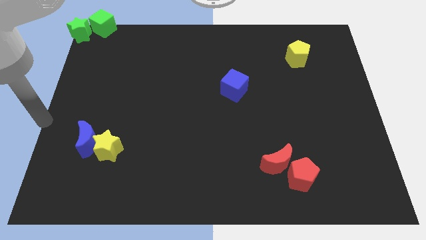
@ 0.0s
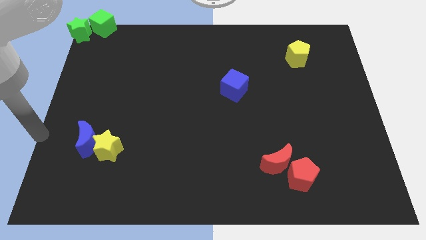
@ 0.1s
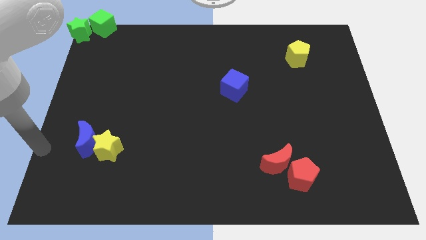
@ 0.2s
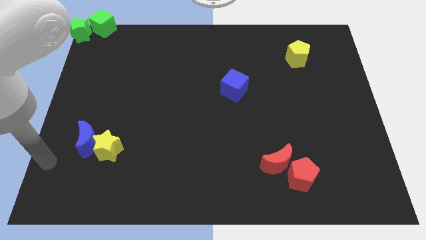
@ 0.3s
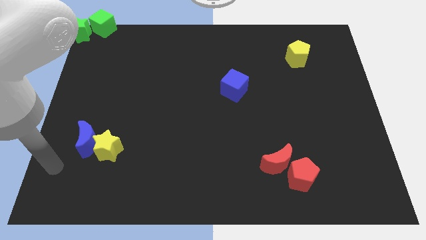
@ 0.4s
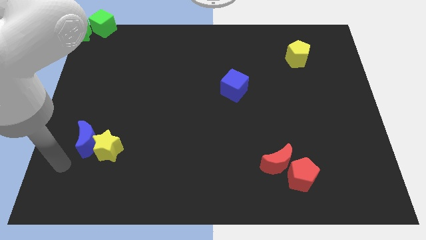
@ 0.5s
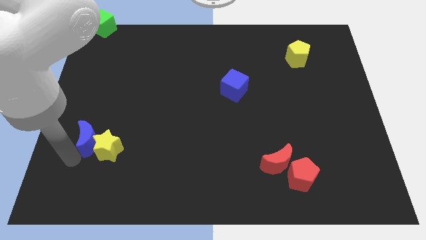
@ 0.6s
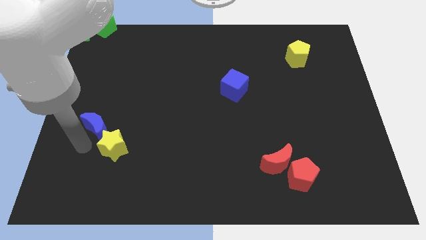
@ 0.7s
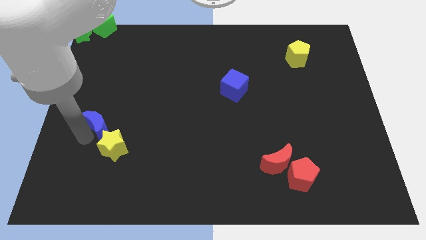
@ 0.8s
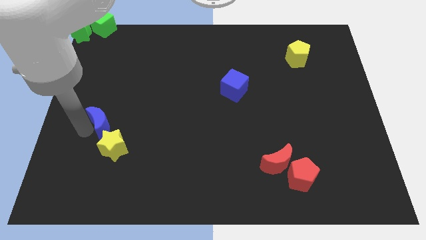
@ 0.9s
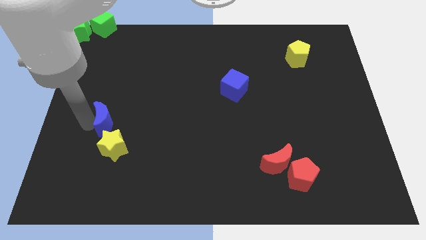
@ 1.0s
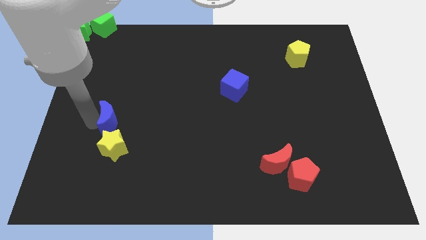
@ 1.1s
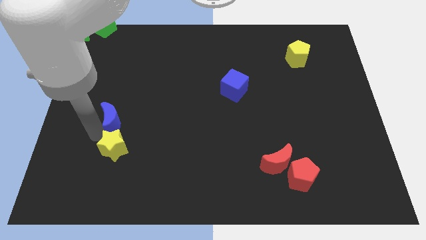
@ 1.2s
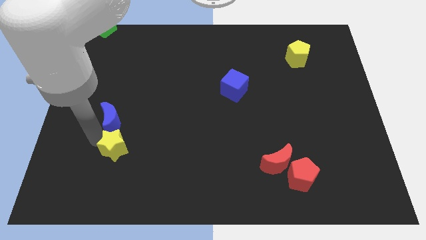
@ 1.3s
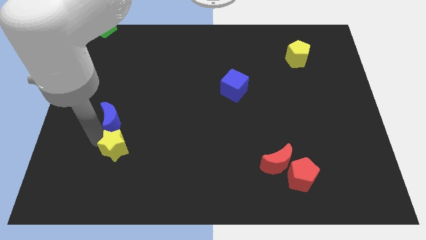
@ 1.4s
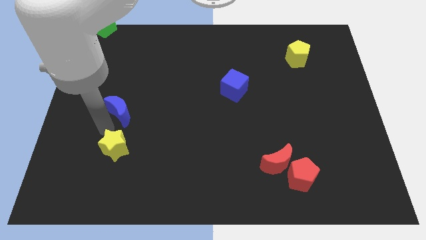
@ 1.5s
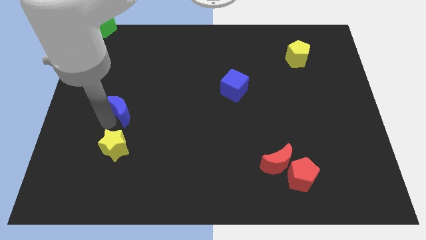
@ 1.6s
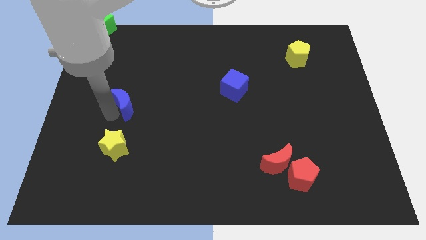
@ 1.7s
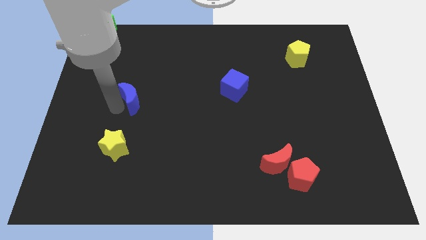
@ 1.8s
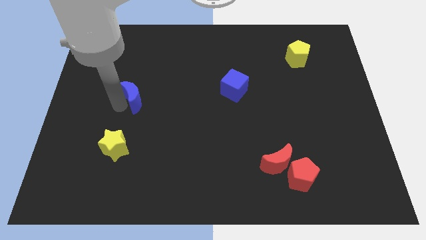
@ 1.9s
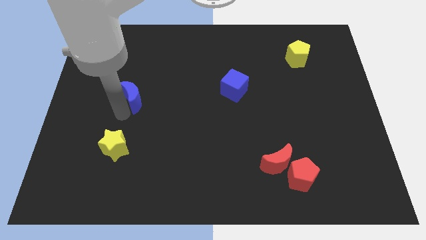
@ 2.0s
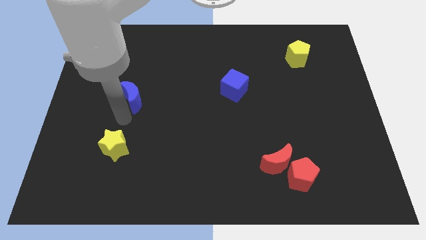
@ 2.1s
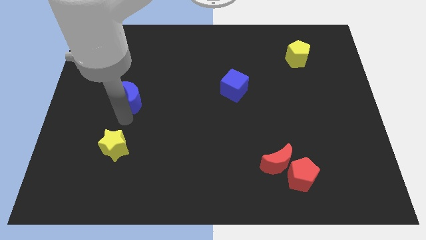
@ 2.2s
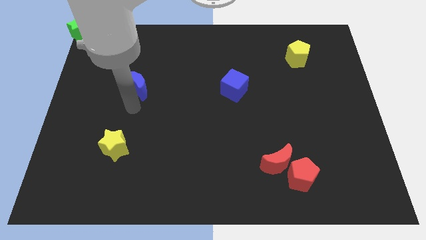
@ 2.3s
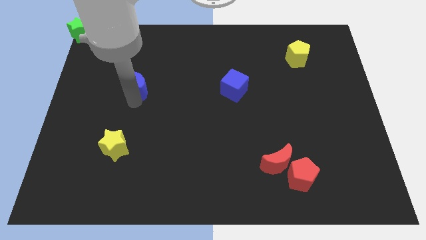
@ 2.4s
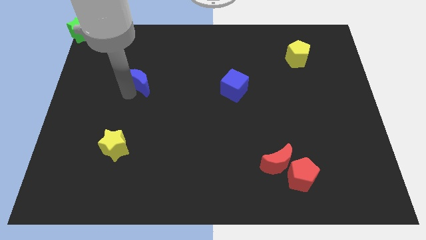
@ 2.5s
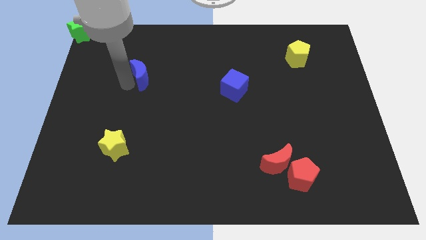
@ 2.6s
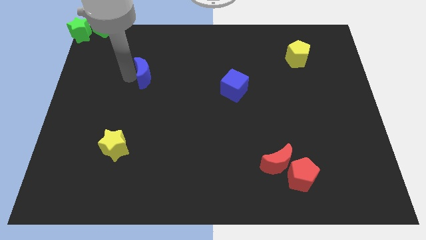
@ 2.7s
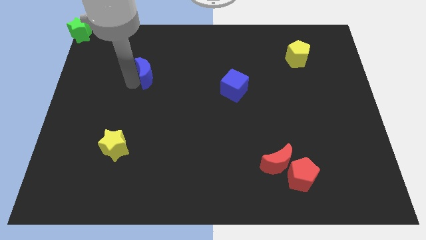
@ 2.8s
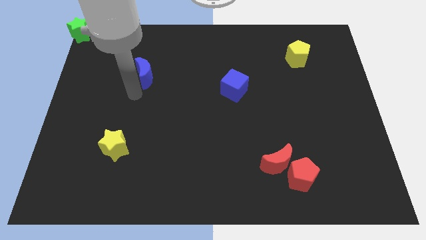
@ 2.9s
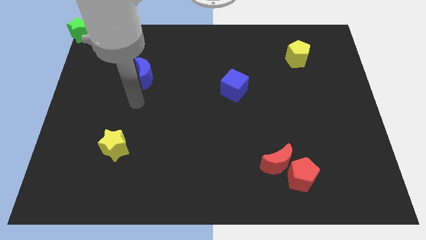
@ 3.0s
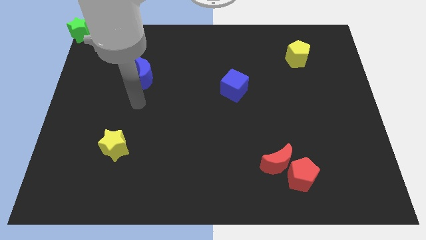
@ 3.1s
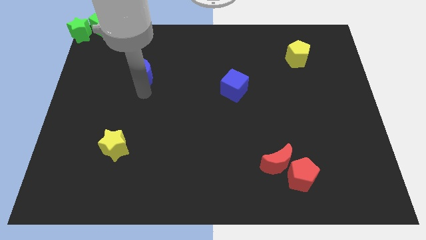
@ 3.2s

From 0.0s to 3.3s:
place the blue moon to the left of the blue cube

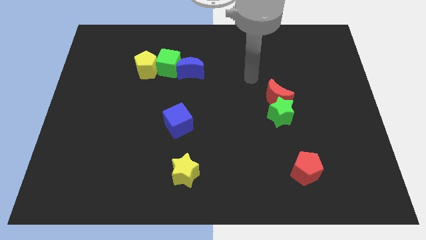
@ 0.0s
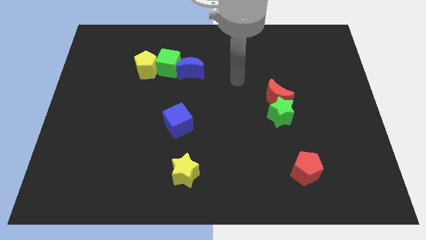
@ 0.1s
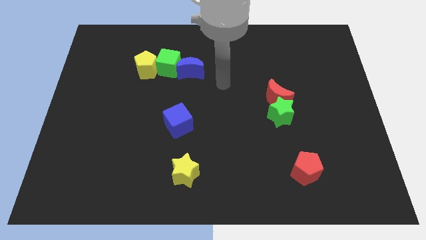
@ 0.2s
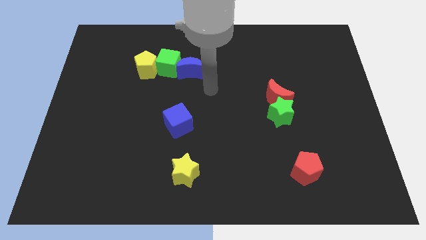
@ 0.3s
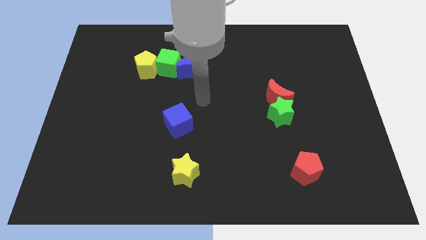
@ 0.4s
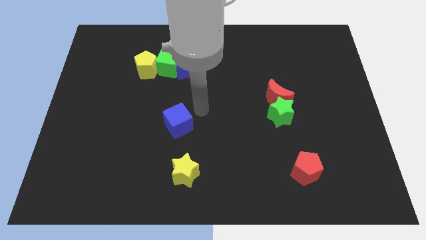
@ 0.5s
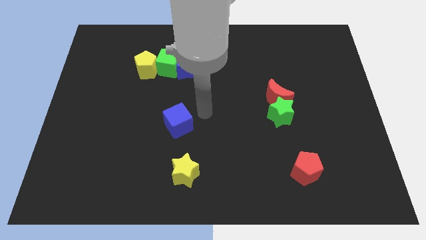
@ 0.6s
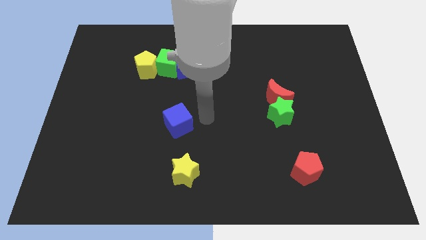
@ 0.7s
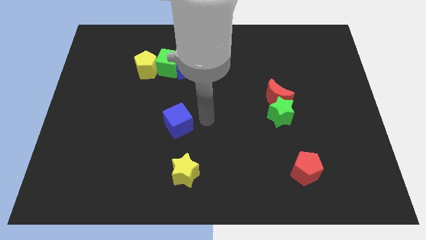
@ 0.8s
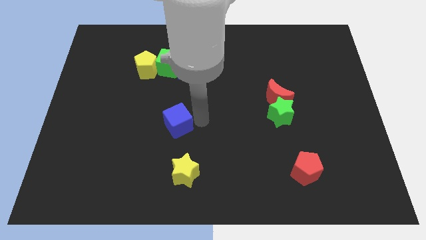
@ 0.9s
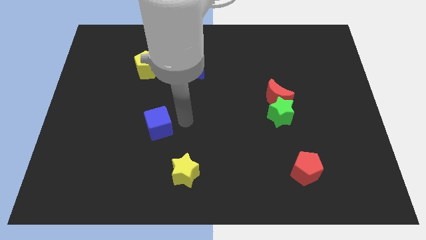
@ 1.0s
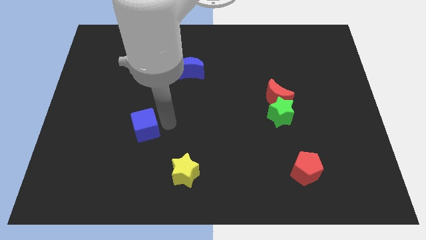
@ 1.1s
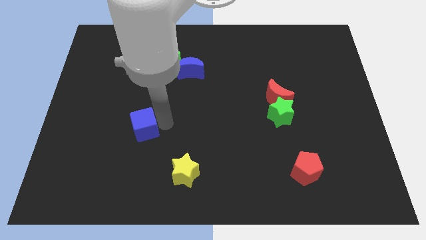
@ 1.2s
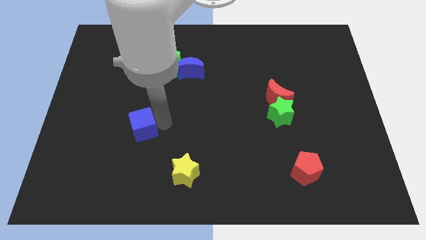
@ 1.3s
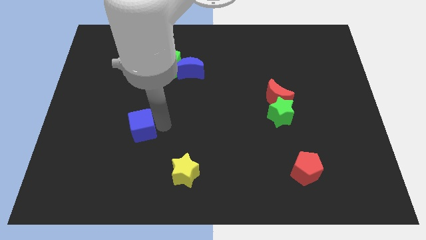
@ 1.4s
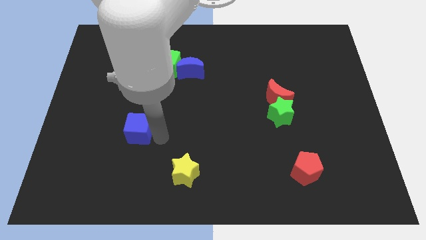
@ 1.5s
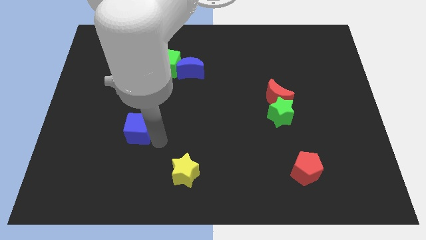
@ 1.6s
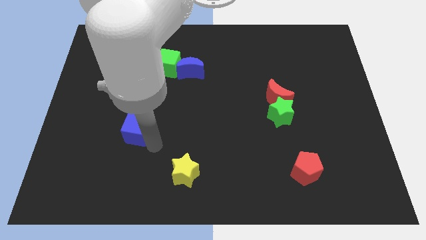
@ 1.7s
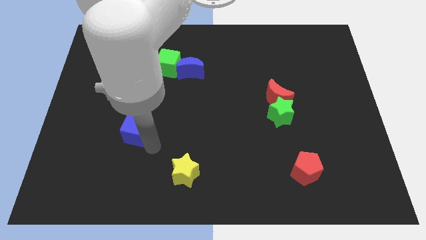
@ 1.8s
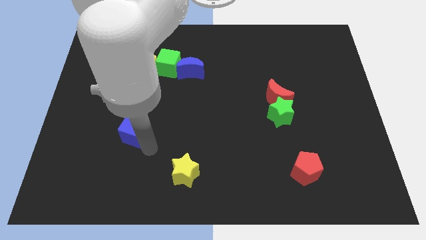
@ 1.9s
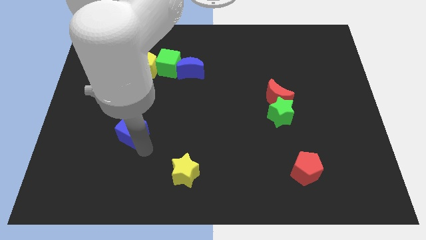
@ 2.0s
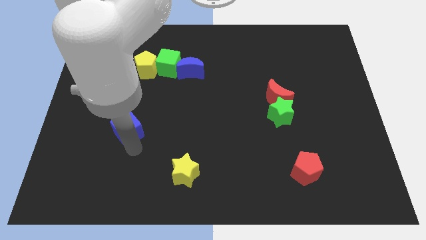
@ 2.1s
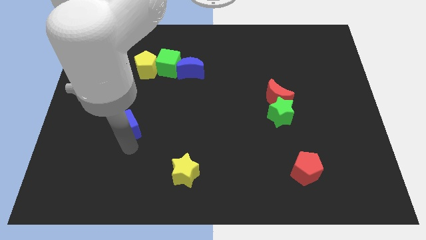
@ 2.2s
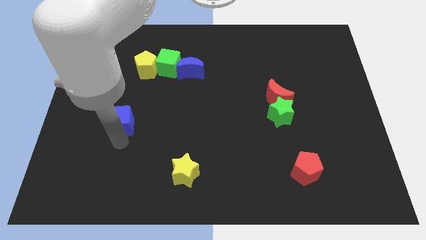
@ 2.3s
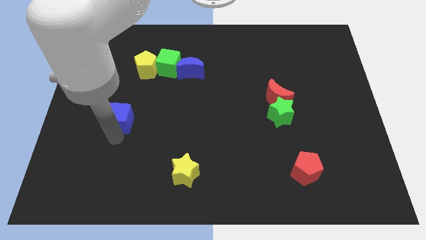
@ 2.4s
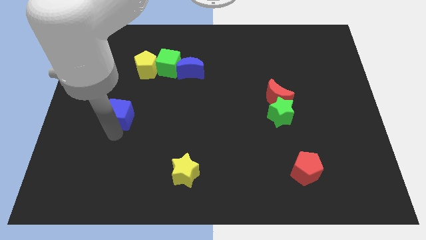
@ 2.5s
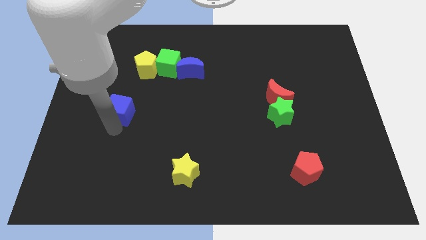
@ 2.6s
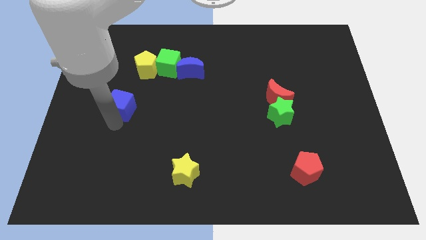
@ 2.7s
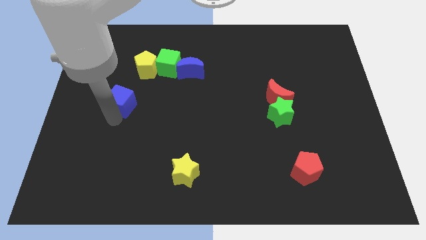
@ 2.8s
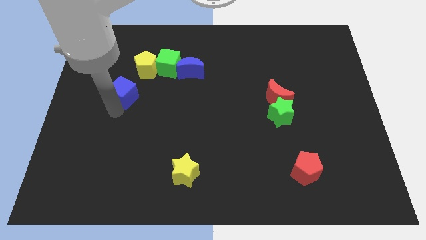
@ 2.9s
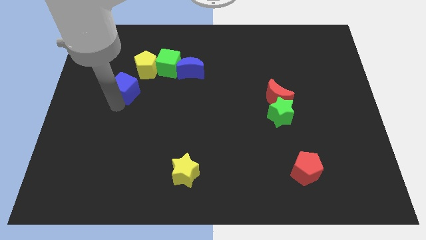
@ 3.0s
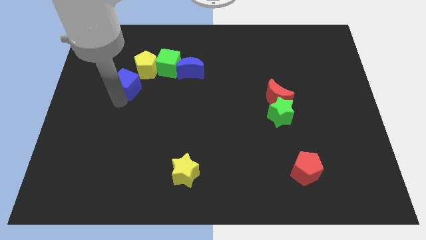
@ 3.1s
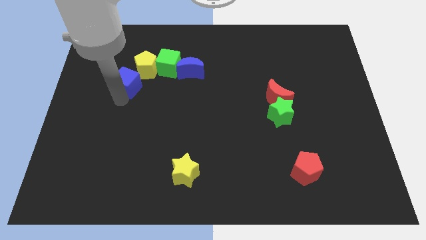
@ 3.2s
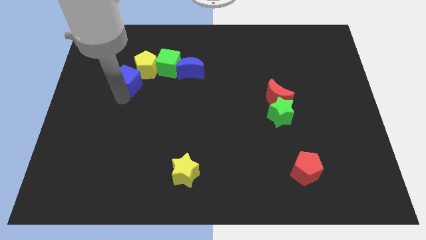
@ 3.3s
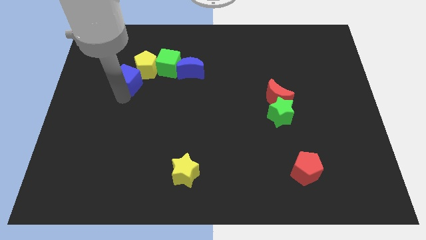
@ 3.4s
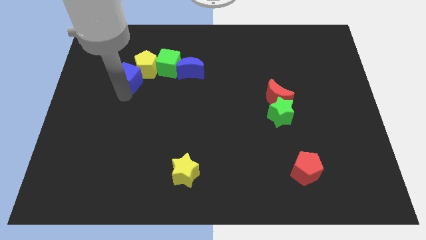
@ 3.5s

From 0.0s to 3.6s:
place the blue cube diagonally bottom left to yellow pentagon

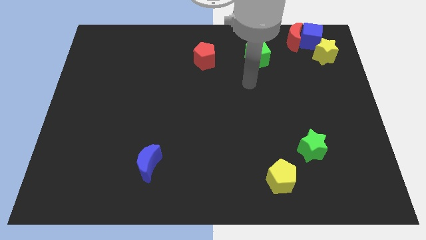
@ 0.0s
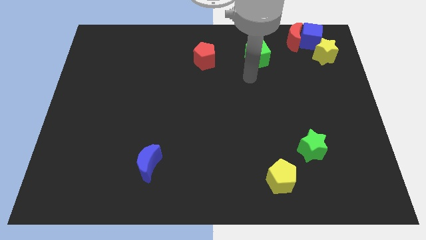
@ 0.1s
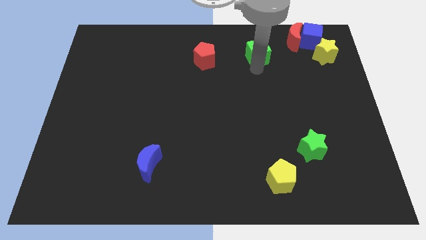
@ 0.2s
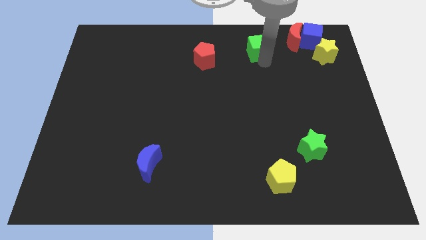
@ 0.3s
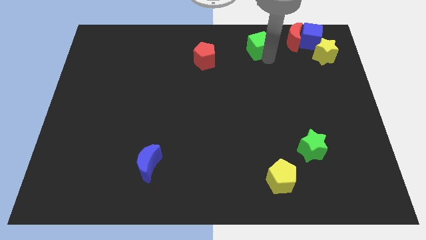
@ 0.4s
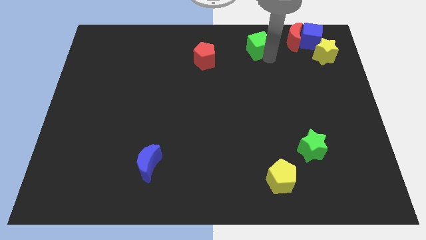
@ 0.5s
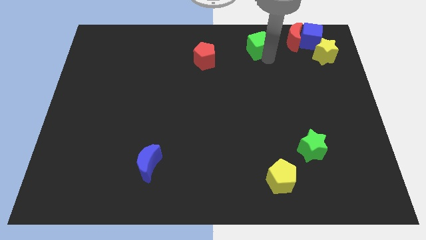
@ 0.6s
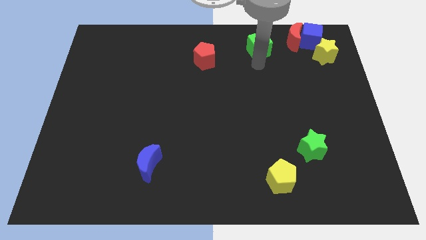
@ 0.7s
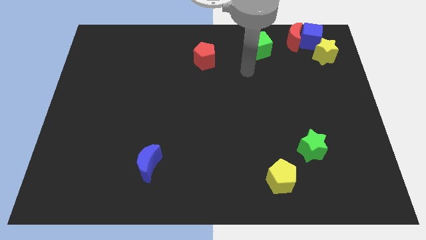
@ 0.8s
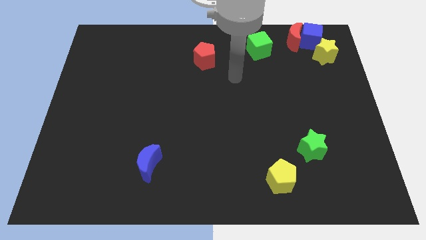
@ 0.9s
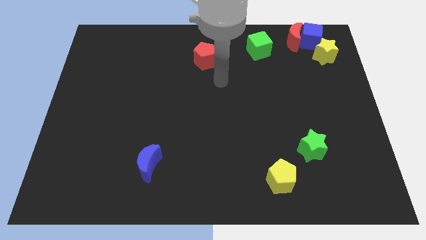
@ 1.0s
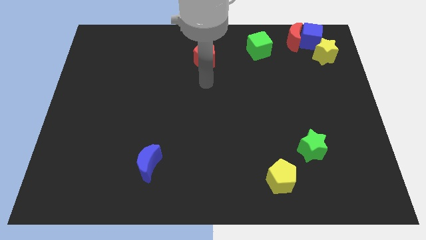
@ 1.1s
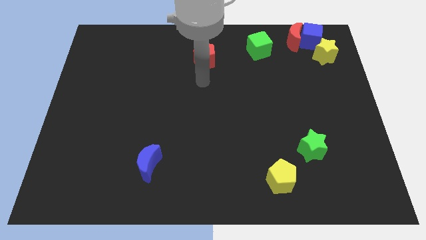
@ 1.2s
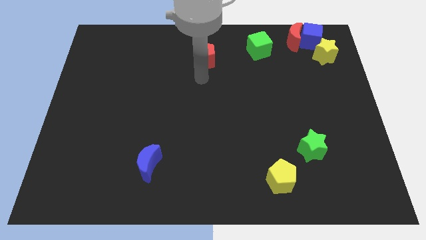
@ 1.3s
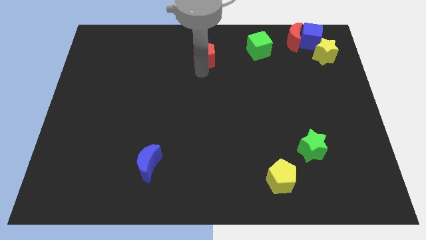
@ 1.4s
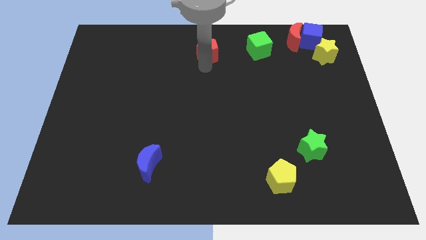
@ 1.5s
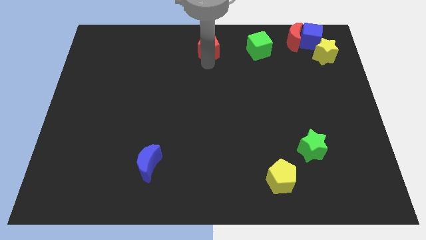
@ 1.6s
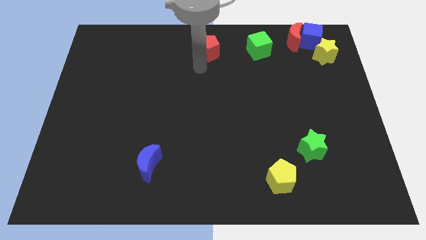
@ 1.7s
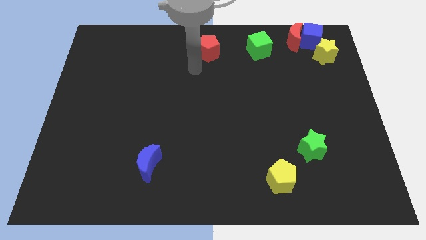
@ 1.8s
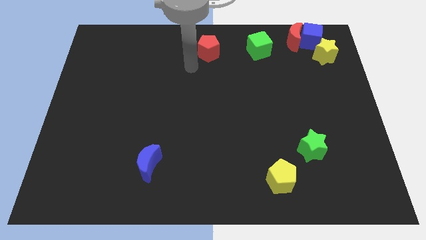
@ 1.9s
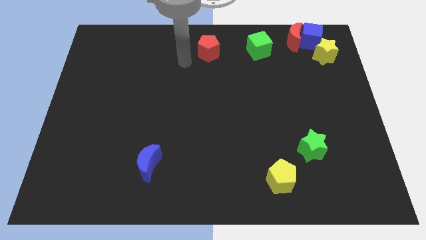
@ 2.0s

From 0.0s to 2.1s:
slightly move the green cube and red pentagon to the top

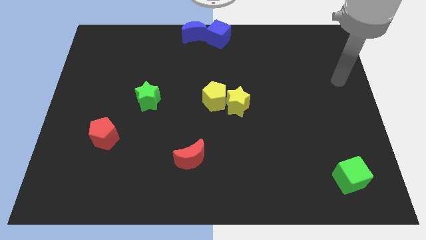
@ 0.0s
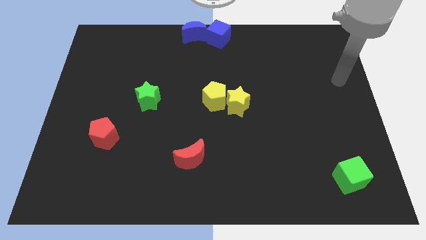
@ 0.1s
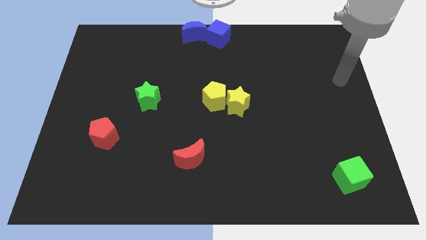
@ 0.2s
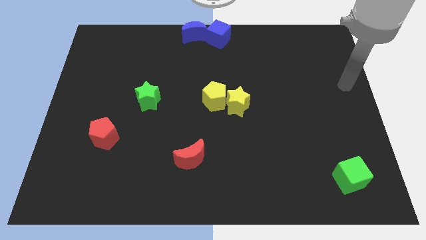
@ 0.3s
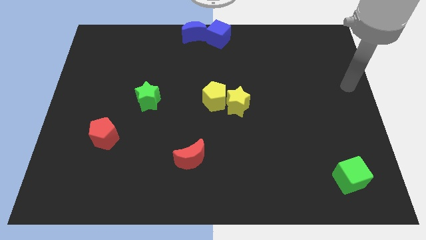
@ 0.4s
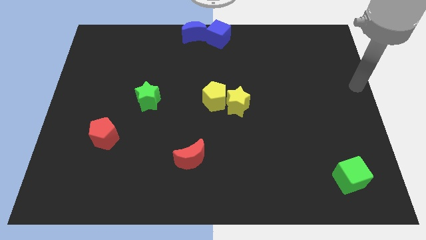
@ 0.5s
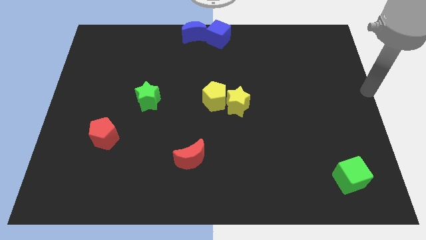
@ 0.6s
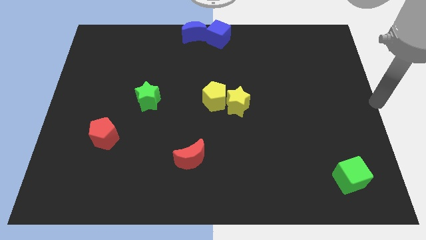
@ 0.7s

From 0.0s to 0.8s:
move your arm to the right center of the board
